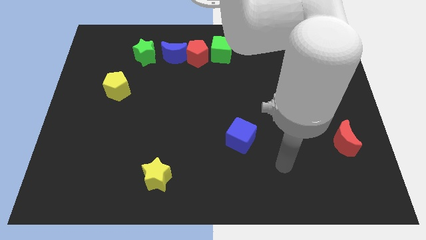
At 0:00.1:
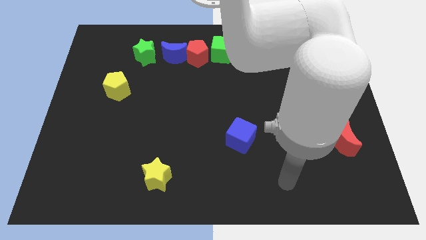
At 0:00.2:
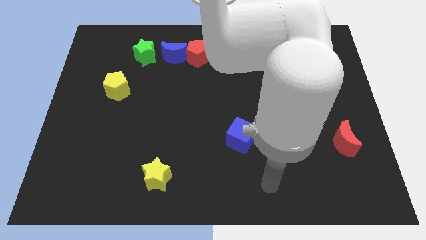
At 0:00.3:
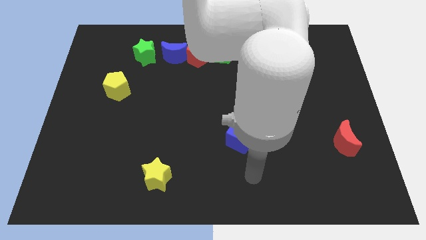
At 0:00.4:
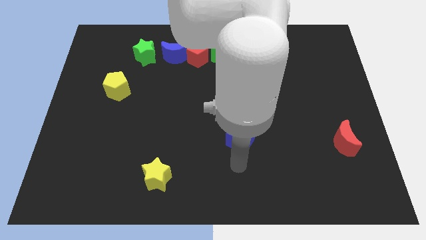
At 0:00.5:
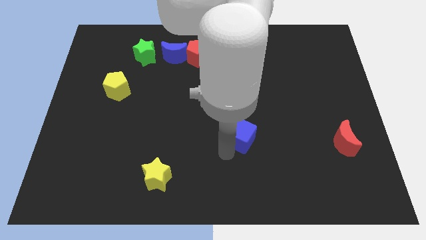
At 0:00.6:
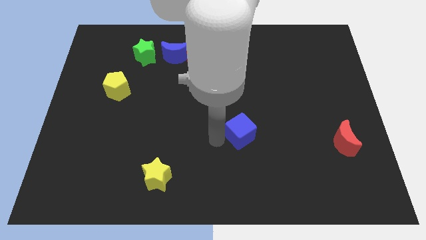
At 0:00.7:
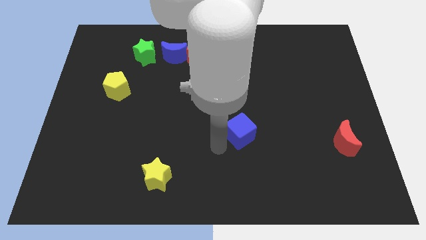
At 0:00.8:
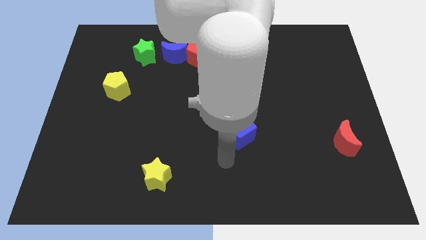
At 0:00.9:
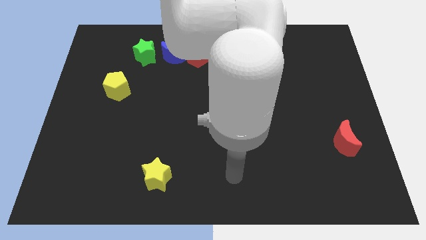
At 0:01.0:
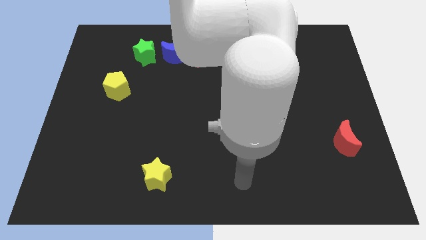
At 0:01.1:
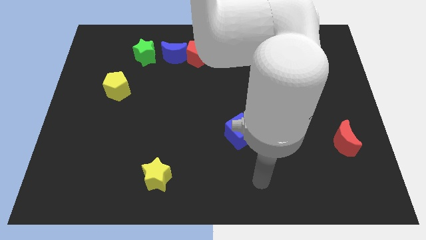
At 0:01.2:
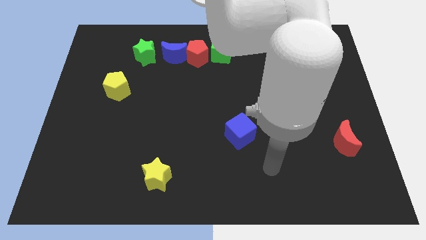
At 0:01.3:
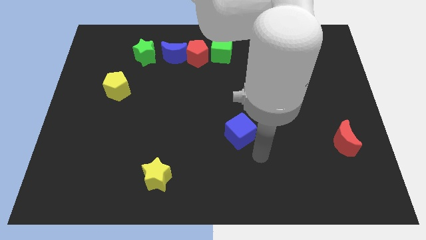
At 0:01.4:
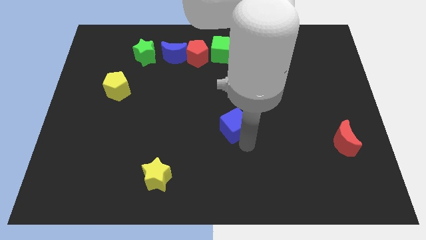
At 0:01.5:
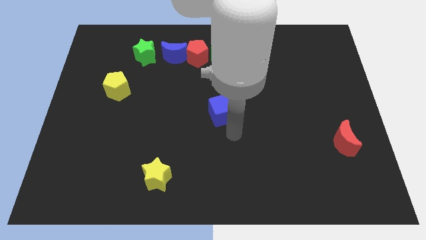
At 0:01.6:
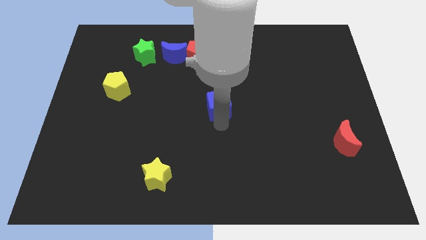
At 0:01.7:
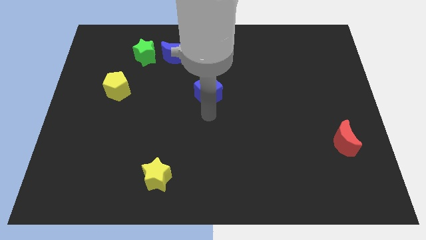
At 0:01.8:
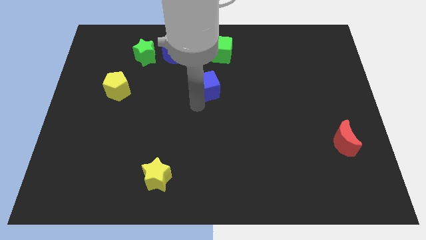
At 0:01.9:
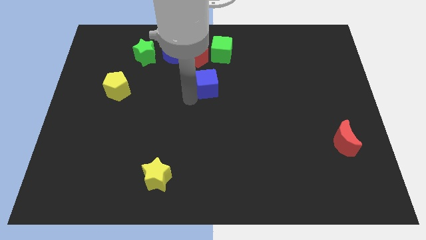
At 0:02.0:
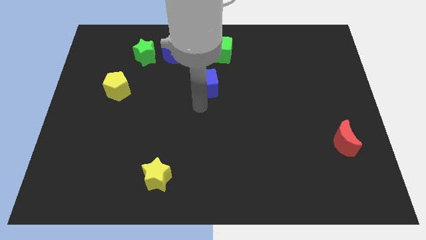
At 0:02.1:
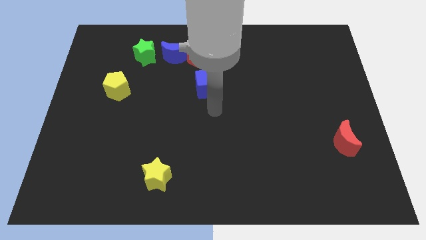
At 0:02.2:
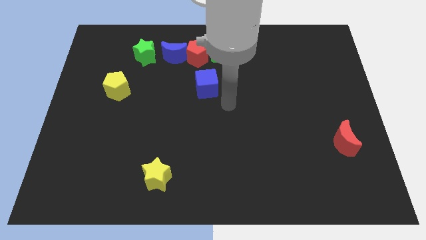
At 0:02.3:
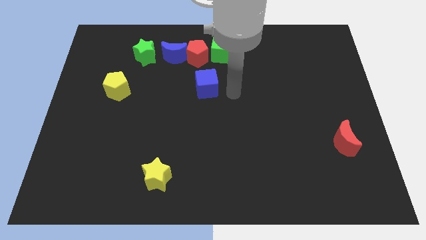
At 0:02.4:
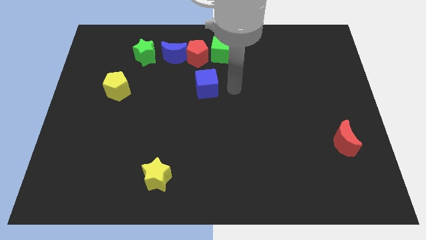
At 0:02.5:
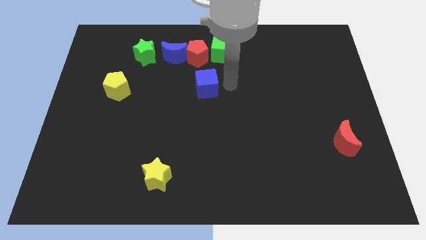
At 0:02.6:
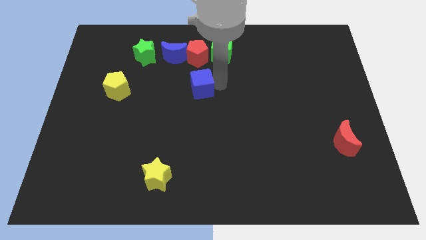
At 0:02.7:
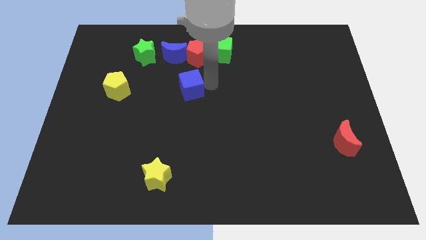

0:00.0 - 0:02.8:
move the blue cube below to the red pentagon

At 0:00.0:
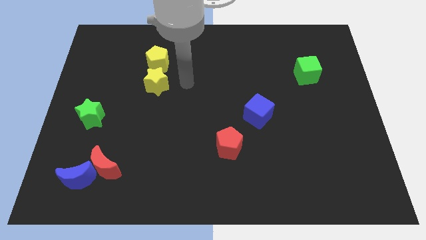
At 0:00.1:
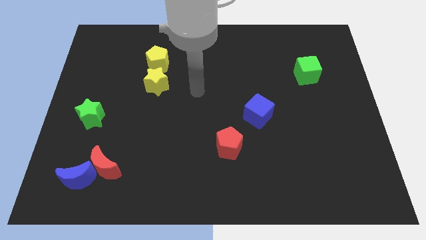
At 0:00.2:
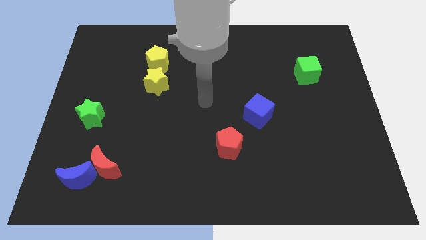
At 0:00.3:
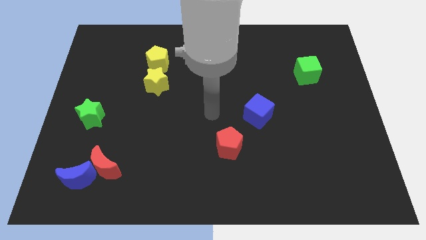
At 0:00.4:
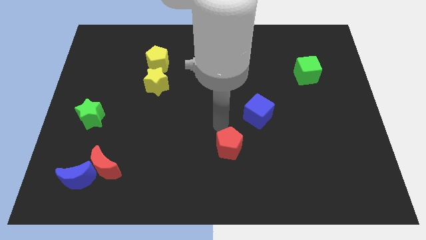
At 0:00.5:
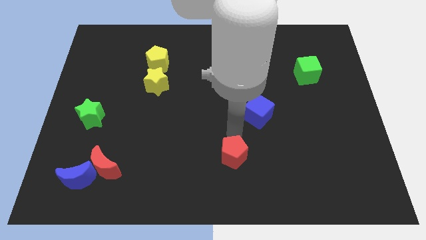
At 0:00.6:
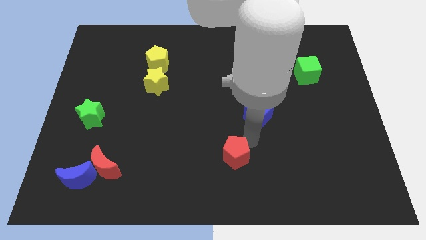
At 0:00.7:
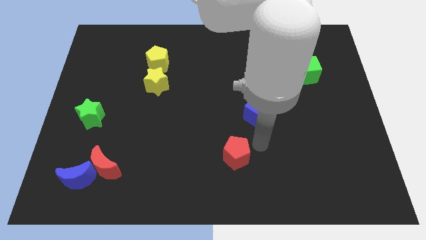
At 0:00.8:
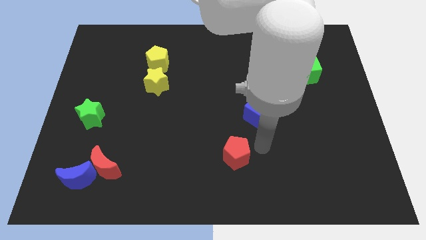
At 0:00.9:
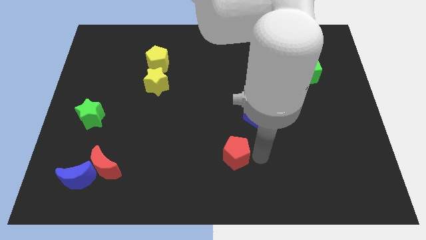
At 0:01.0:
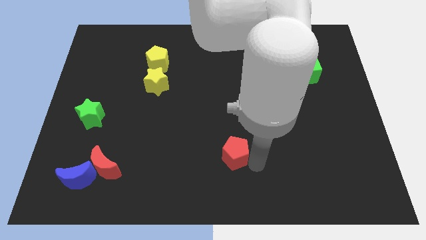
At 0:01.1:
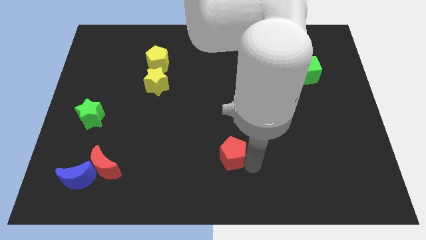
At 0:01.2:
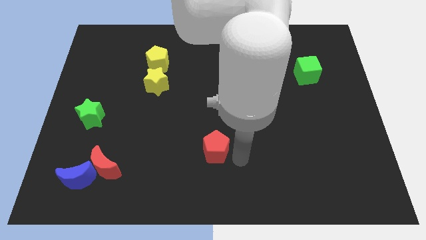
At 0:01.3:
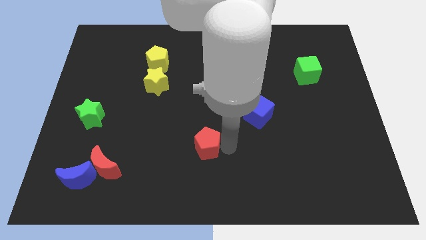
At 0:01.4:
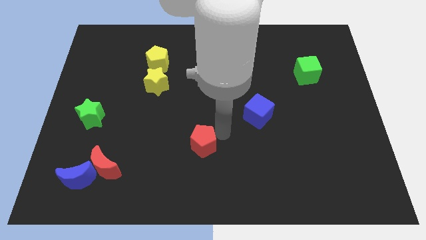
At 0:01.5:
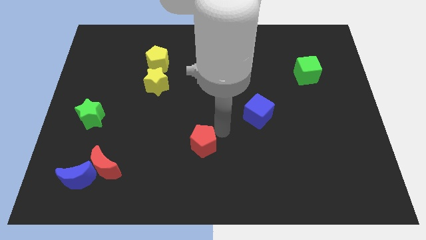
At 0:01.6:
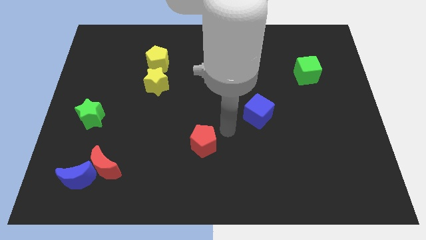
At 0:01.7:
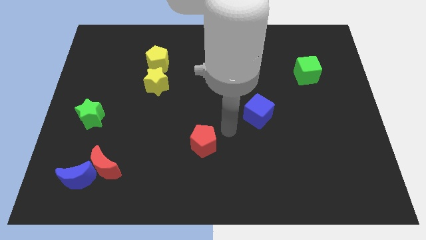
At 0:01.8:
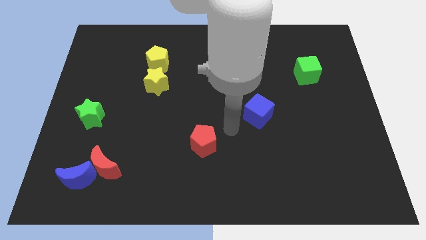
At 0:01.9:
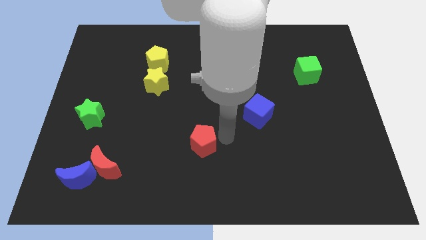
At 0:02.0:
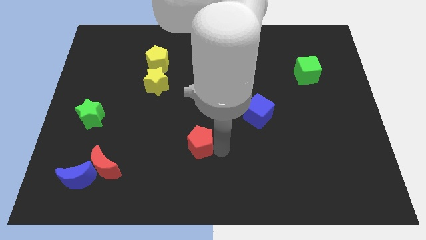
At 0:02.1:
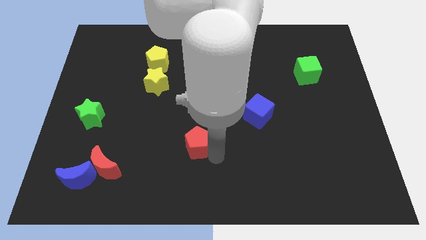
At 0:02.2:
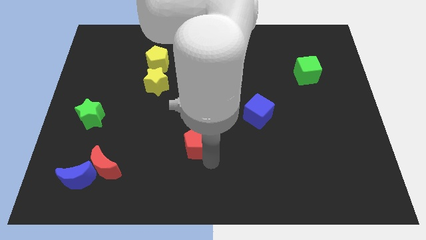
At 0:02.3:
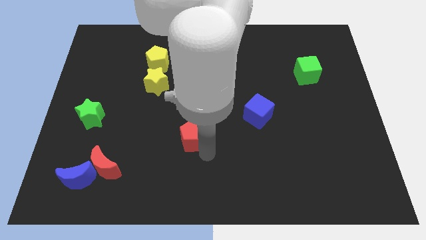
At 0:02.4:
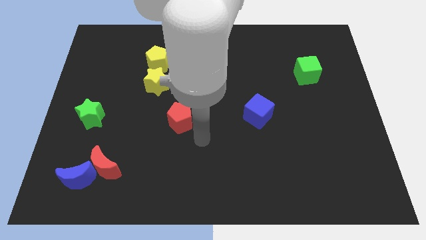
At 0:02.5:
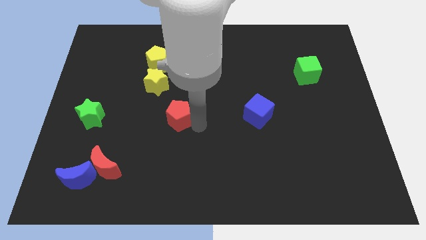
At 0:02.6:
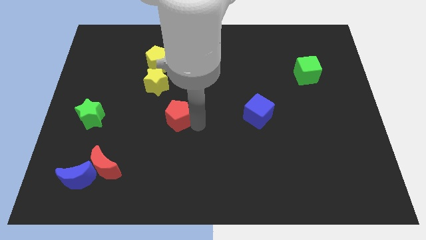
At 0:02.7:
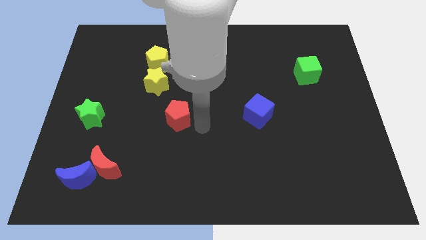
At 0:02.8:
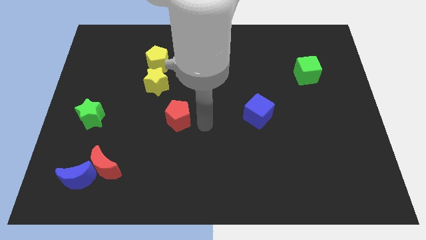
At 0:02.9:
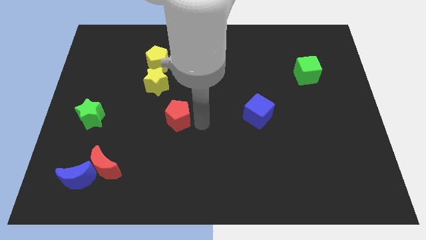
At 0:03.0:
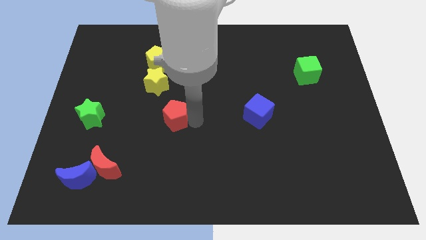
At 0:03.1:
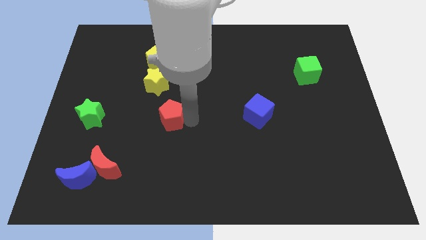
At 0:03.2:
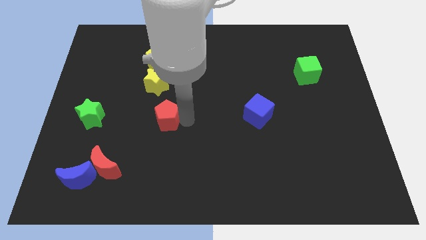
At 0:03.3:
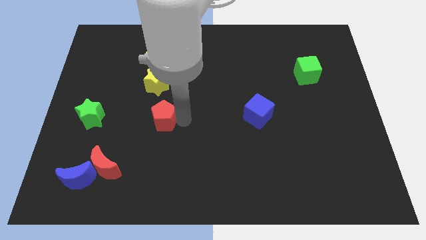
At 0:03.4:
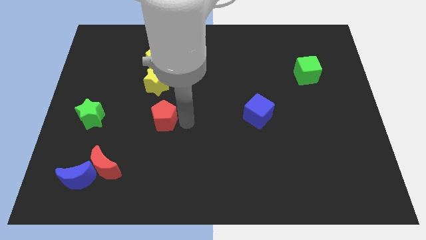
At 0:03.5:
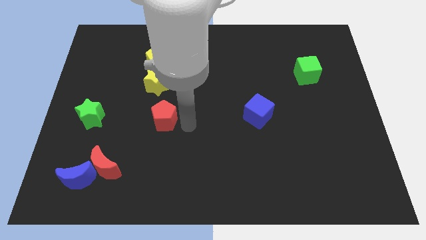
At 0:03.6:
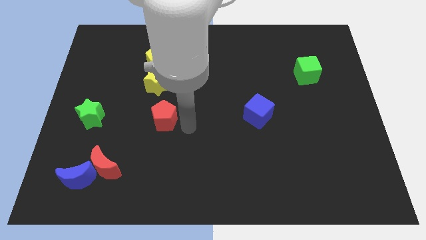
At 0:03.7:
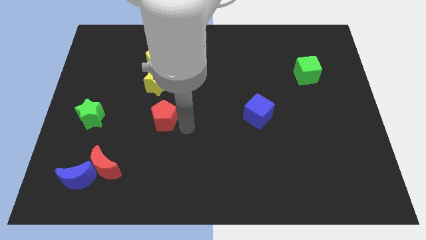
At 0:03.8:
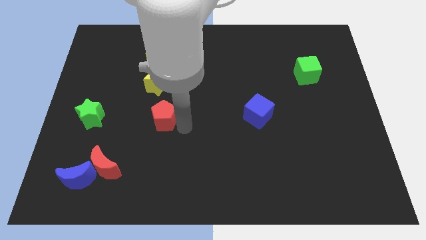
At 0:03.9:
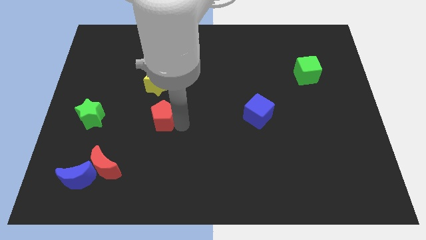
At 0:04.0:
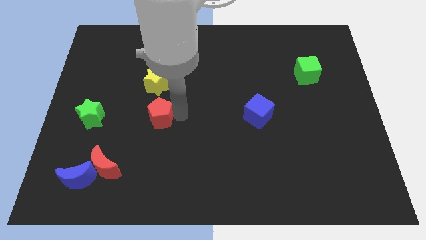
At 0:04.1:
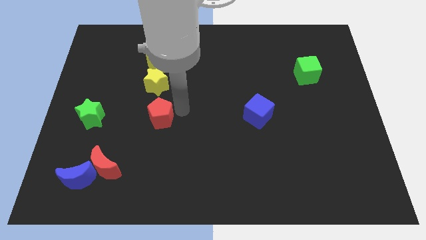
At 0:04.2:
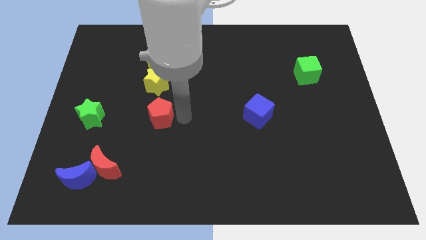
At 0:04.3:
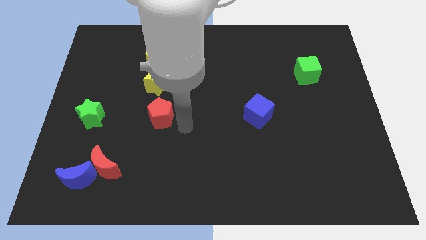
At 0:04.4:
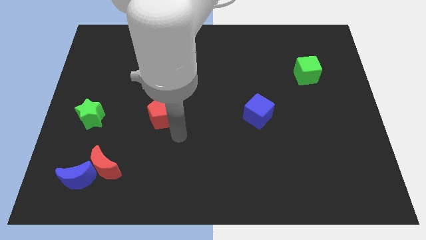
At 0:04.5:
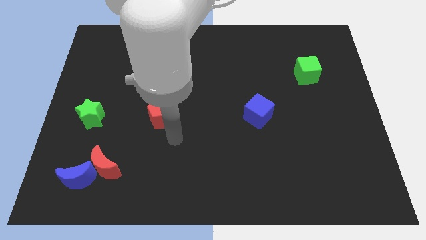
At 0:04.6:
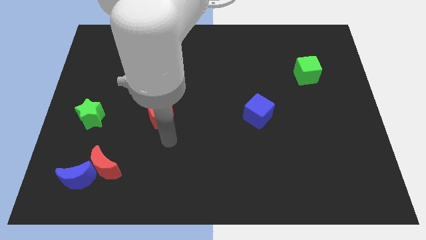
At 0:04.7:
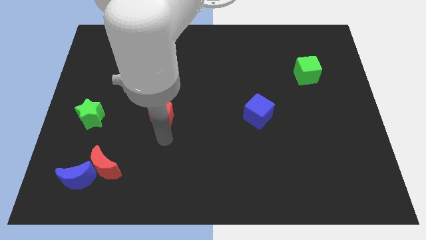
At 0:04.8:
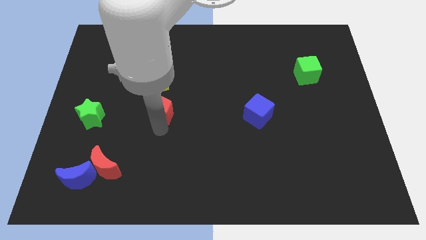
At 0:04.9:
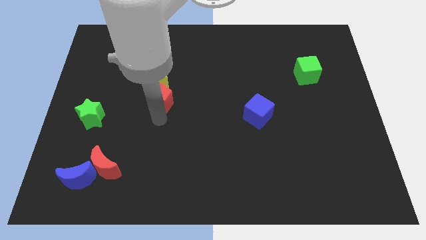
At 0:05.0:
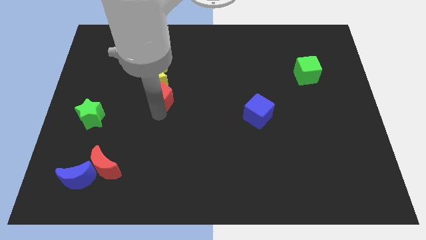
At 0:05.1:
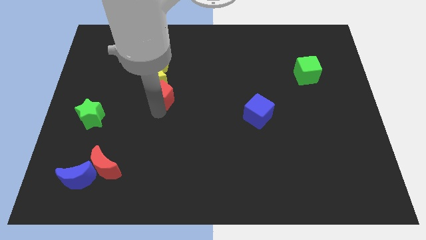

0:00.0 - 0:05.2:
move the red pentagon into the yellow star

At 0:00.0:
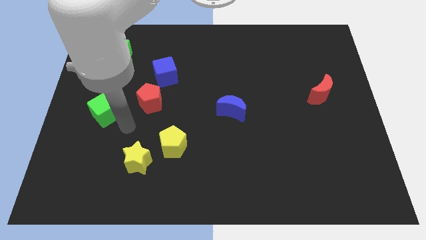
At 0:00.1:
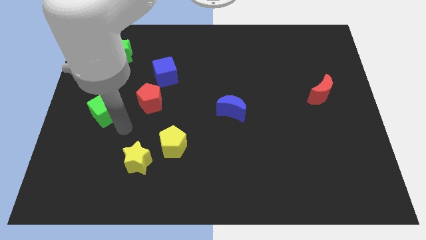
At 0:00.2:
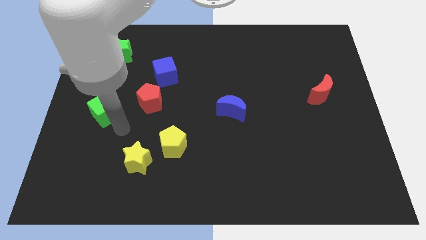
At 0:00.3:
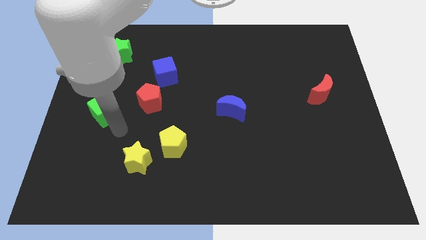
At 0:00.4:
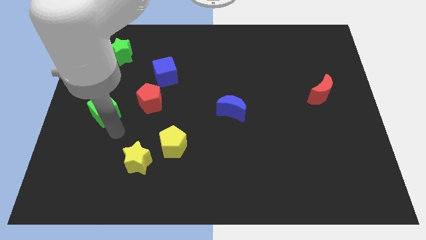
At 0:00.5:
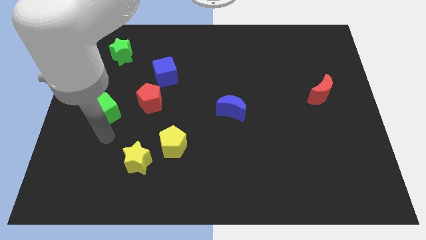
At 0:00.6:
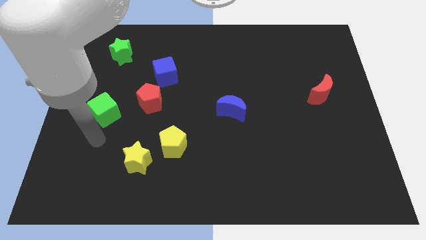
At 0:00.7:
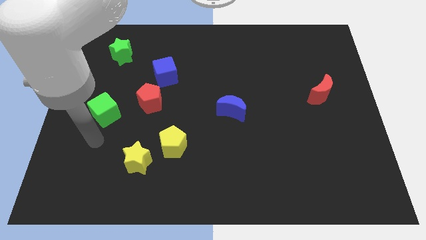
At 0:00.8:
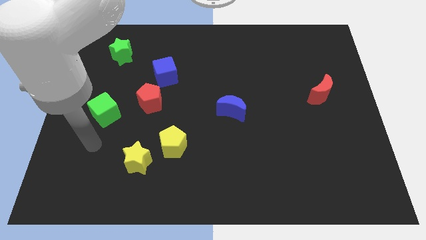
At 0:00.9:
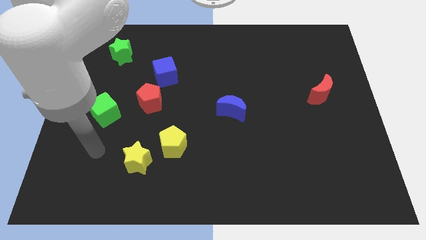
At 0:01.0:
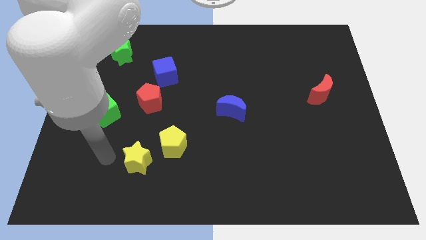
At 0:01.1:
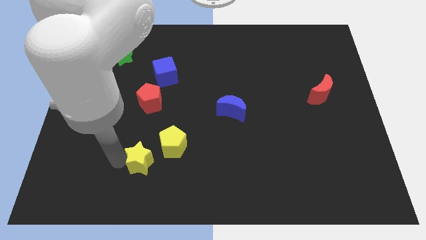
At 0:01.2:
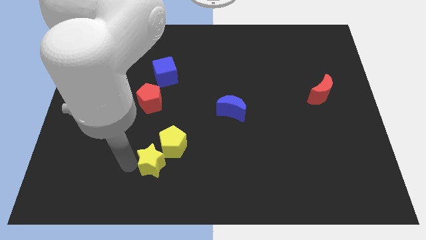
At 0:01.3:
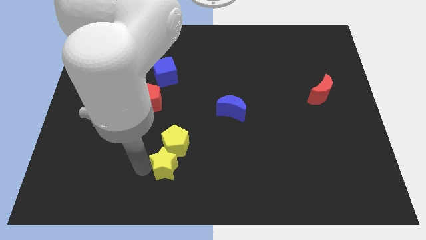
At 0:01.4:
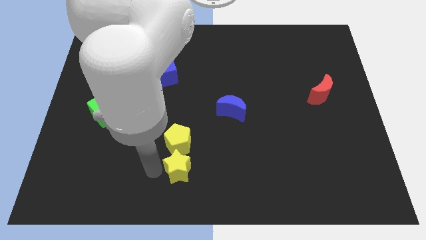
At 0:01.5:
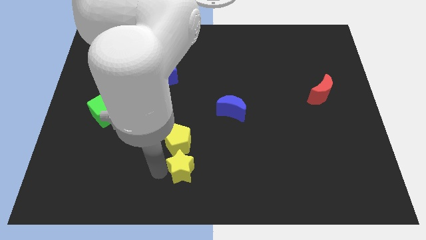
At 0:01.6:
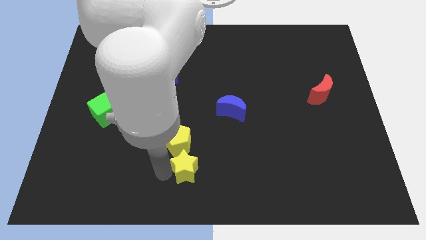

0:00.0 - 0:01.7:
place yellow star to the bottom of the yellow pentagon
